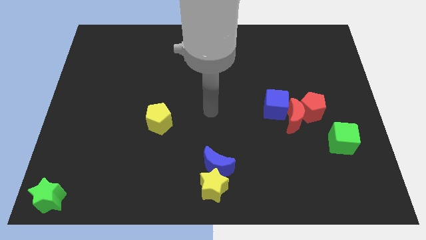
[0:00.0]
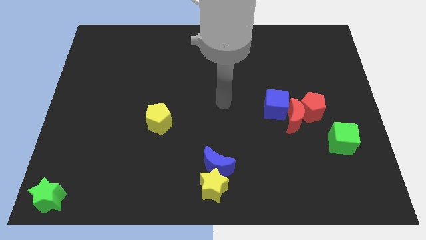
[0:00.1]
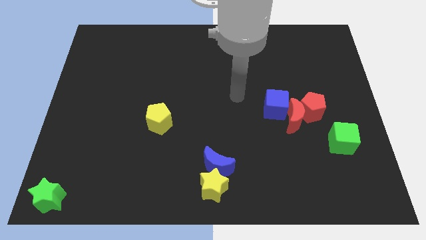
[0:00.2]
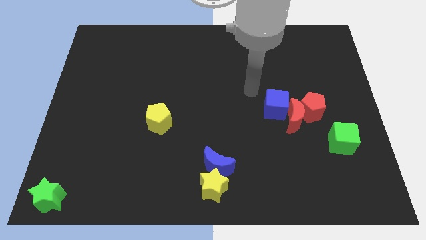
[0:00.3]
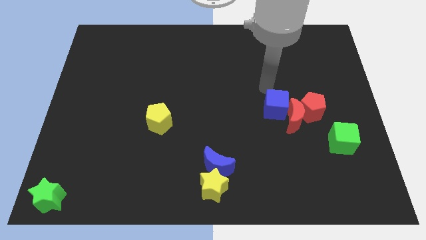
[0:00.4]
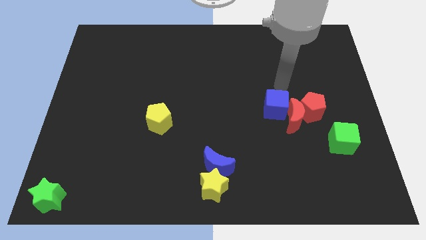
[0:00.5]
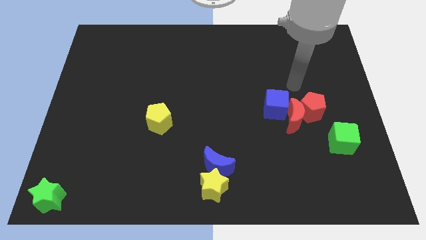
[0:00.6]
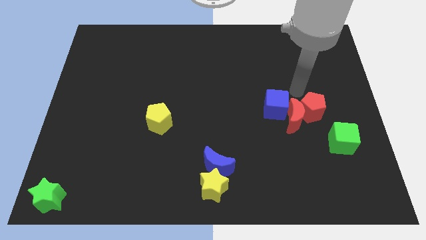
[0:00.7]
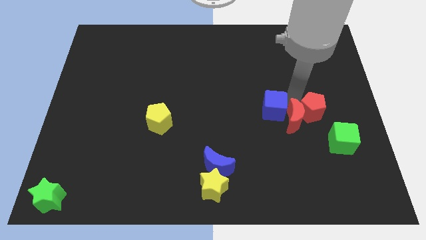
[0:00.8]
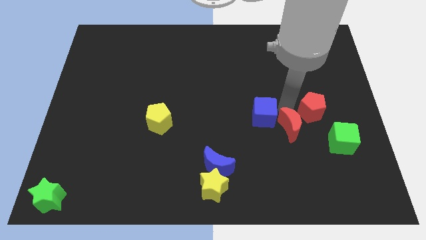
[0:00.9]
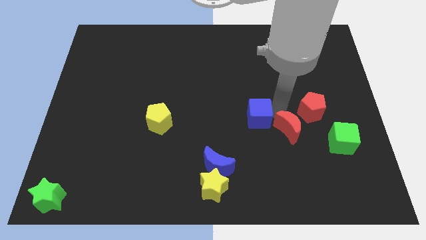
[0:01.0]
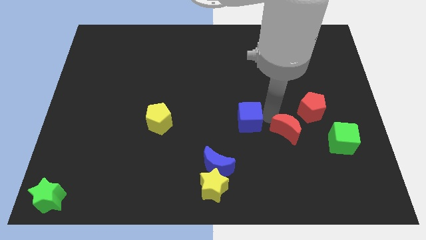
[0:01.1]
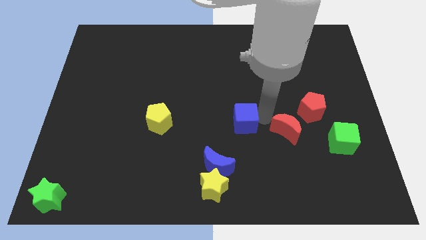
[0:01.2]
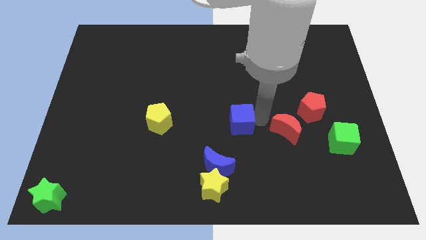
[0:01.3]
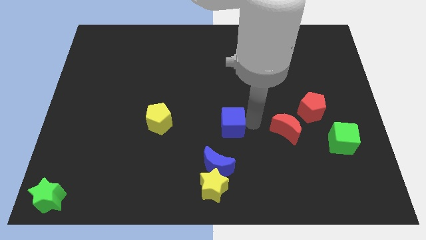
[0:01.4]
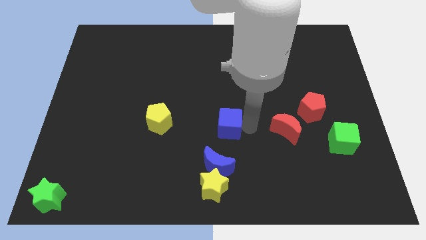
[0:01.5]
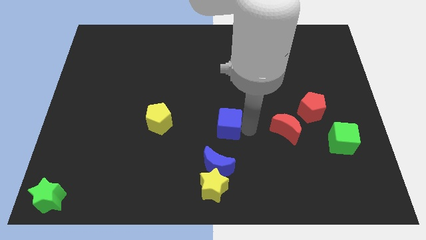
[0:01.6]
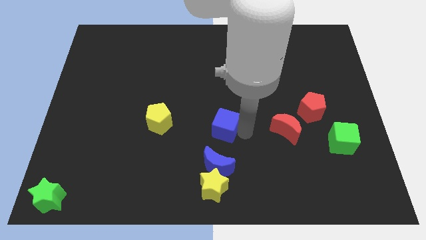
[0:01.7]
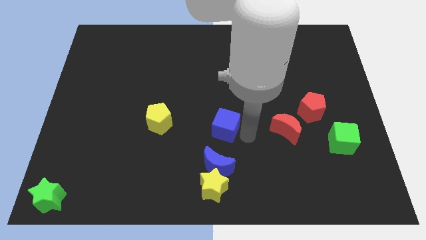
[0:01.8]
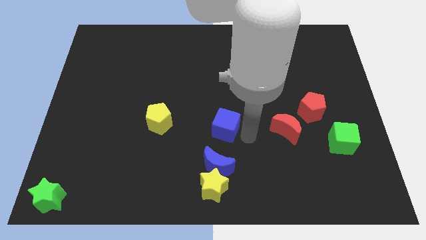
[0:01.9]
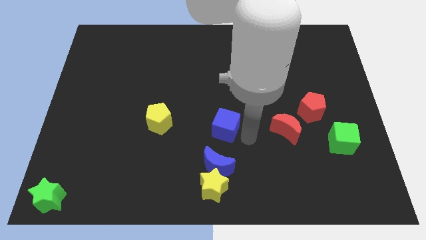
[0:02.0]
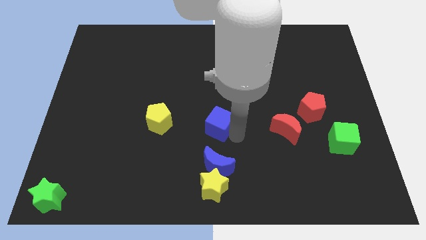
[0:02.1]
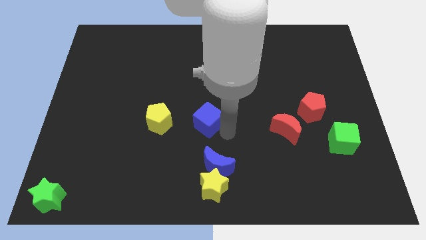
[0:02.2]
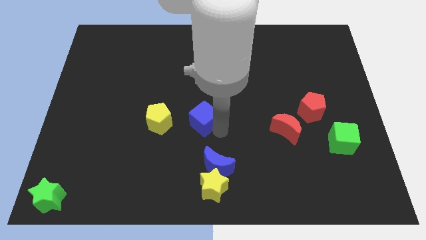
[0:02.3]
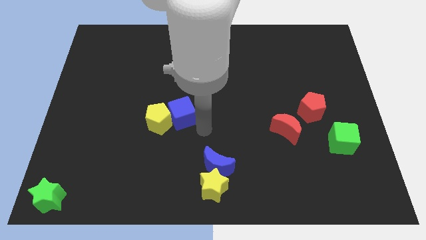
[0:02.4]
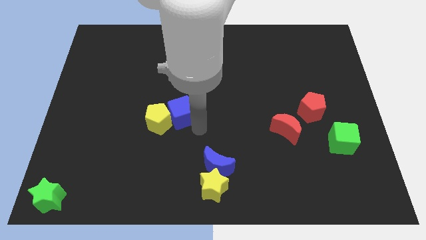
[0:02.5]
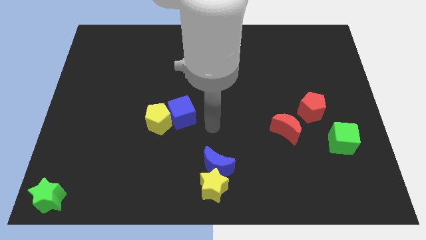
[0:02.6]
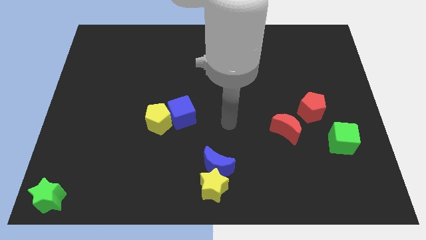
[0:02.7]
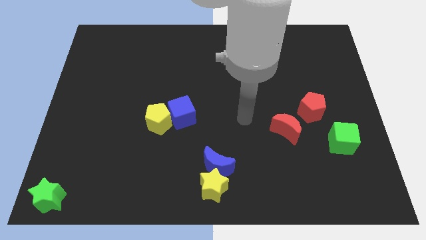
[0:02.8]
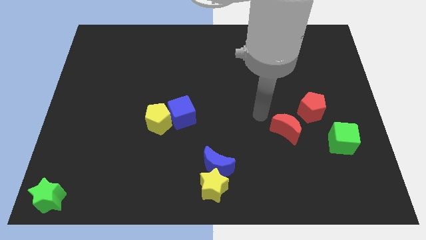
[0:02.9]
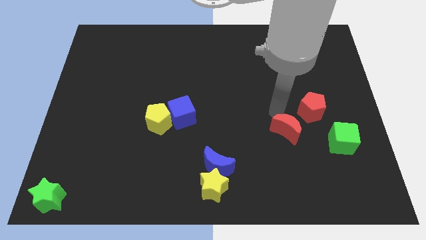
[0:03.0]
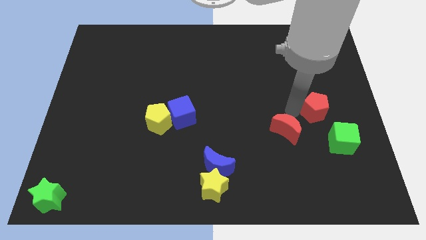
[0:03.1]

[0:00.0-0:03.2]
move the blue cube to the right side of the yellow pentagon

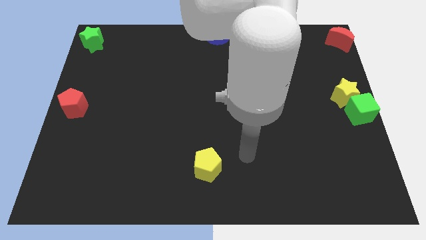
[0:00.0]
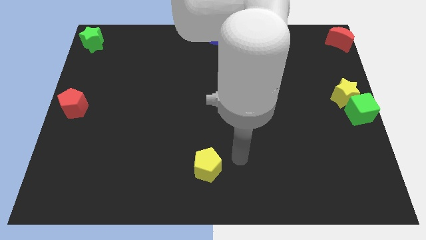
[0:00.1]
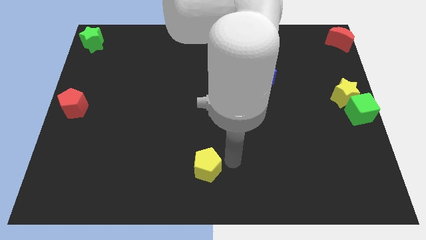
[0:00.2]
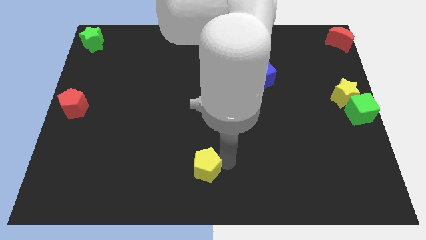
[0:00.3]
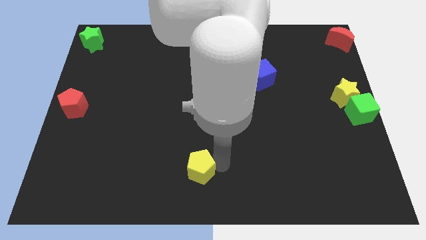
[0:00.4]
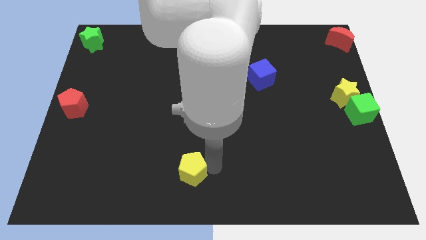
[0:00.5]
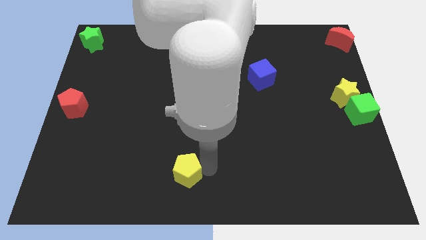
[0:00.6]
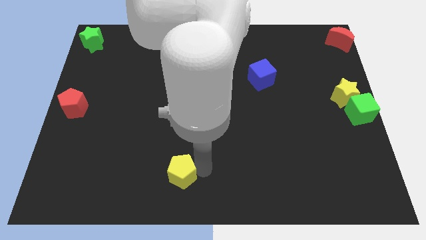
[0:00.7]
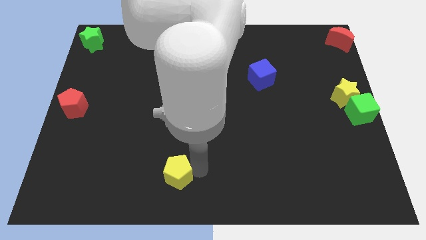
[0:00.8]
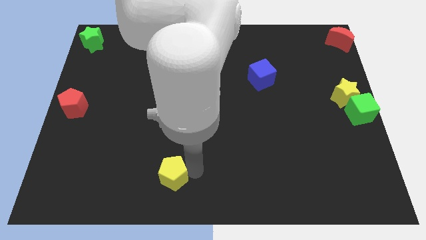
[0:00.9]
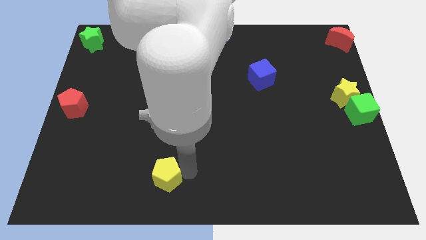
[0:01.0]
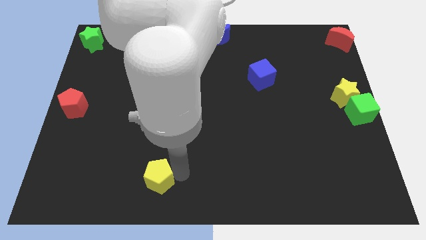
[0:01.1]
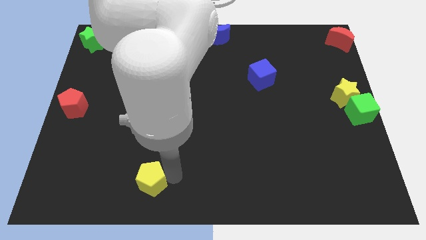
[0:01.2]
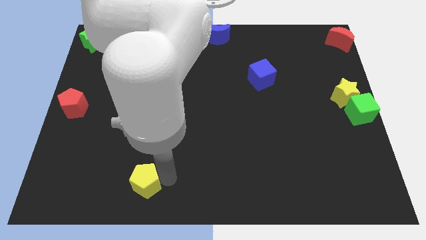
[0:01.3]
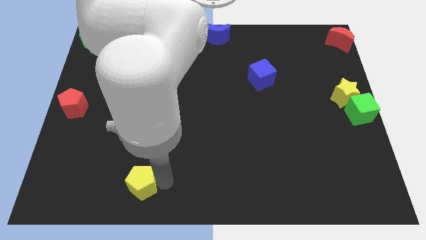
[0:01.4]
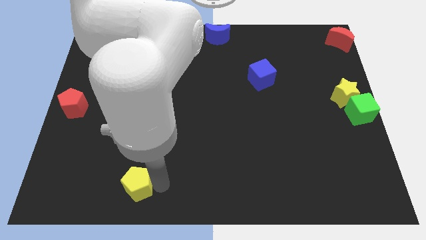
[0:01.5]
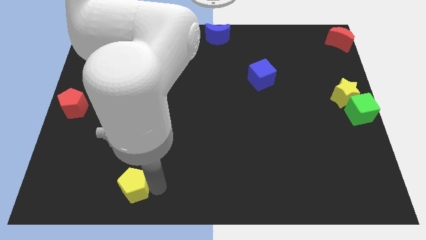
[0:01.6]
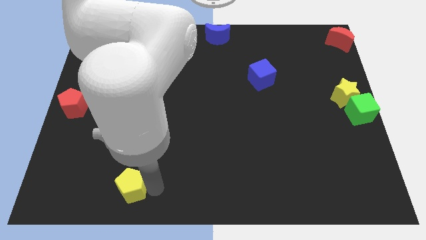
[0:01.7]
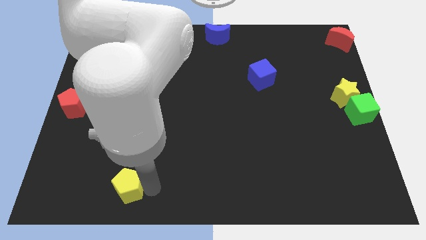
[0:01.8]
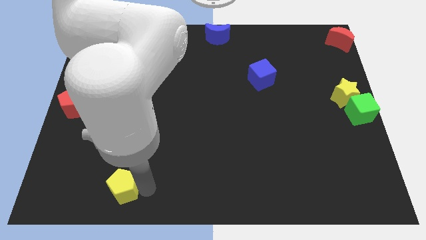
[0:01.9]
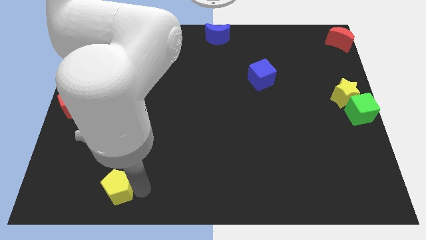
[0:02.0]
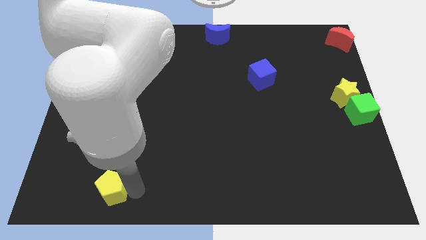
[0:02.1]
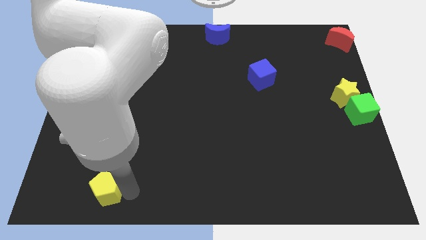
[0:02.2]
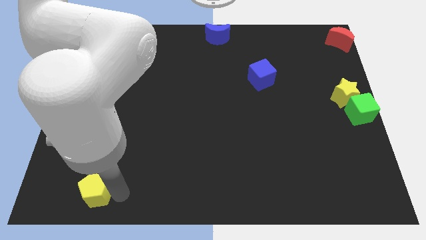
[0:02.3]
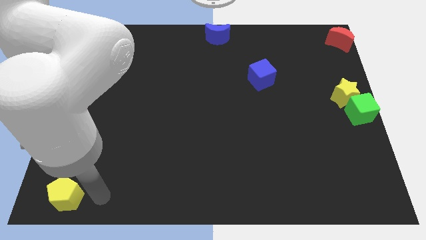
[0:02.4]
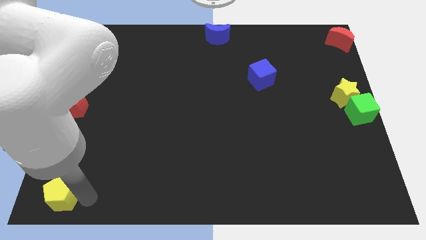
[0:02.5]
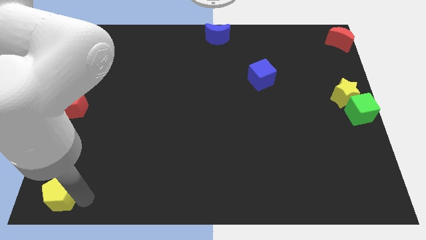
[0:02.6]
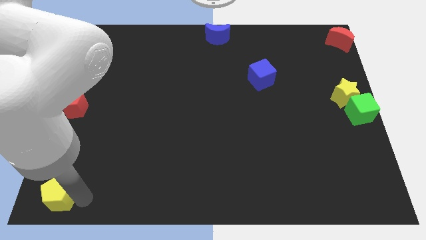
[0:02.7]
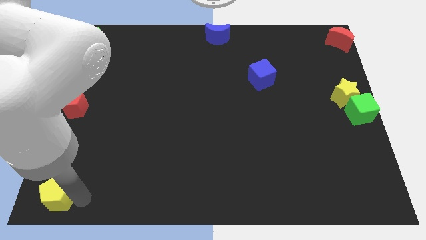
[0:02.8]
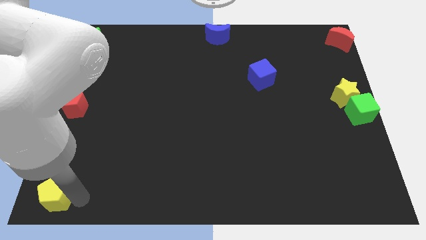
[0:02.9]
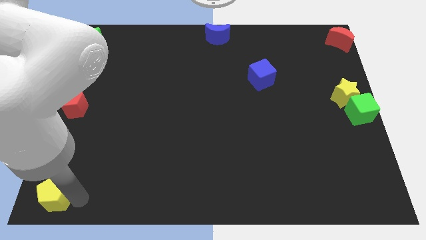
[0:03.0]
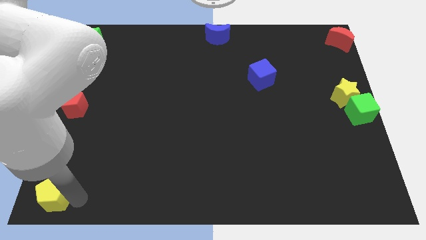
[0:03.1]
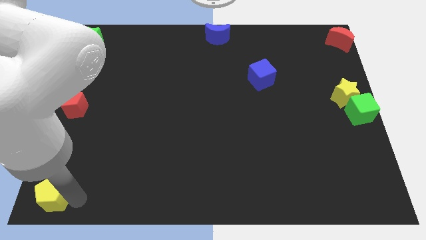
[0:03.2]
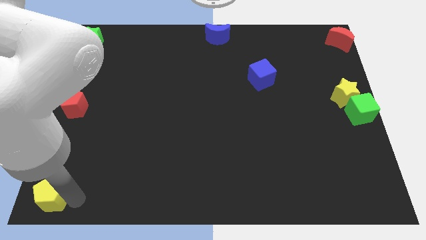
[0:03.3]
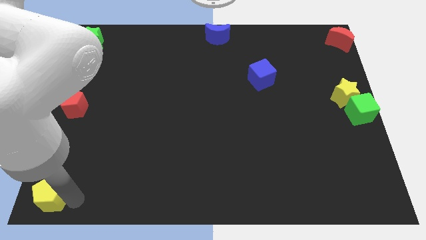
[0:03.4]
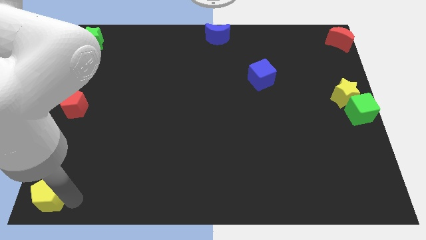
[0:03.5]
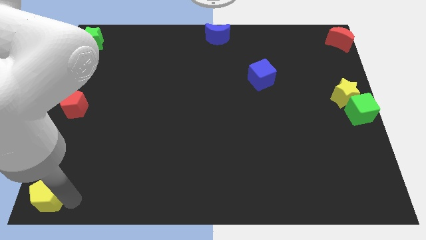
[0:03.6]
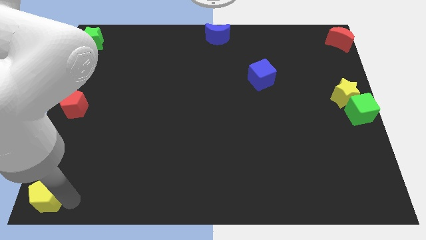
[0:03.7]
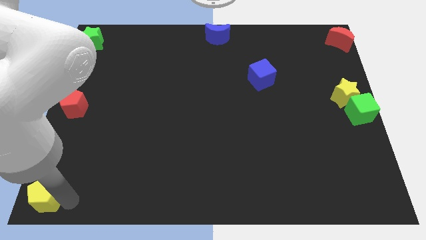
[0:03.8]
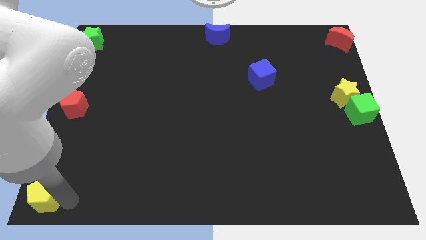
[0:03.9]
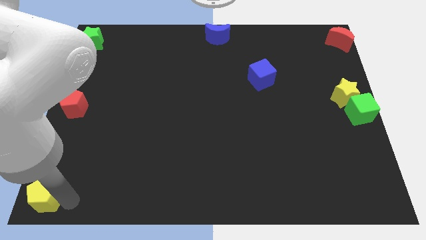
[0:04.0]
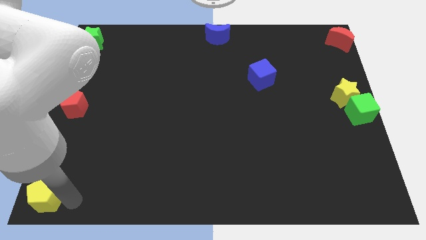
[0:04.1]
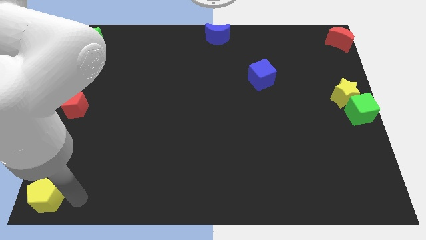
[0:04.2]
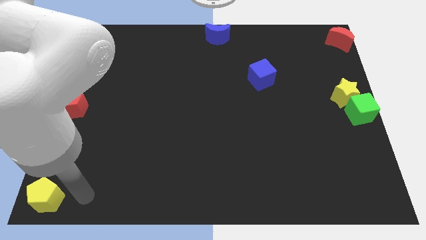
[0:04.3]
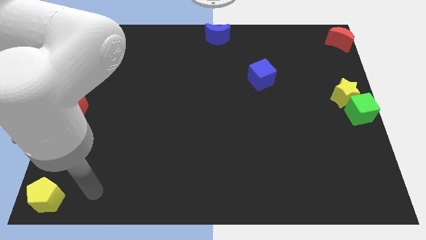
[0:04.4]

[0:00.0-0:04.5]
move the yellow pentagon to the bottom left corner of the board

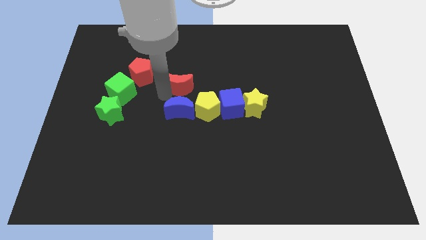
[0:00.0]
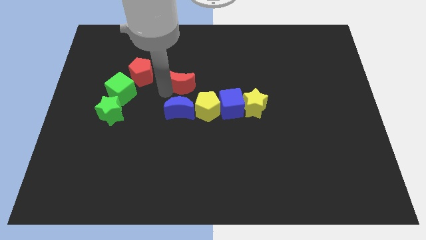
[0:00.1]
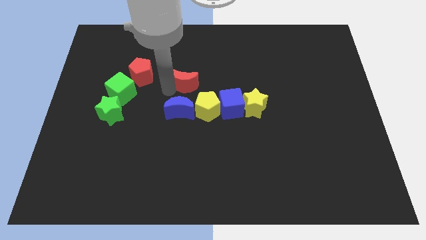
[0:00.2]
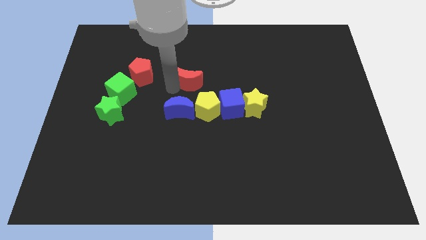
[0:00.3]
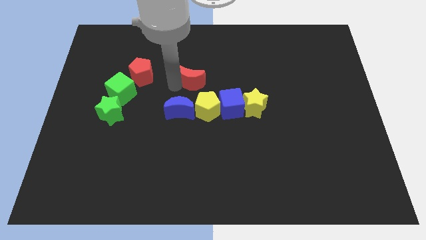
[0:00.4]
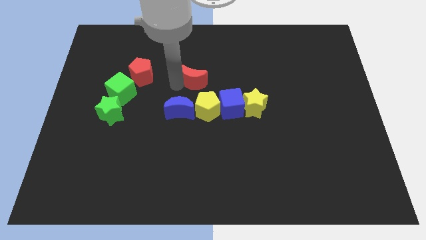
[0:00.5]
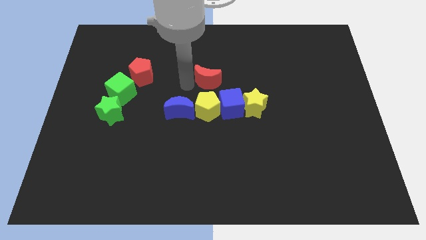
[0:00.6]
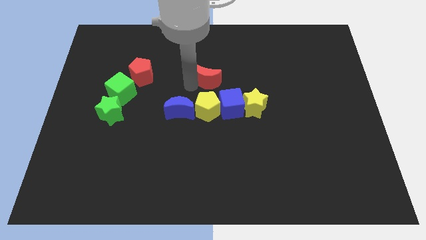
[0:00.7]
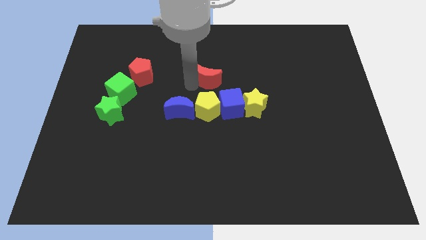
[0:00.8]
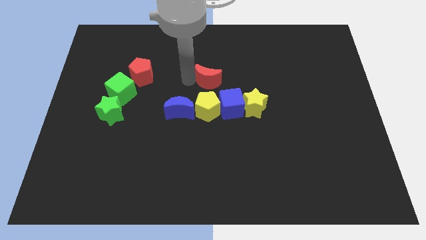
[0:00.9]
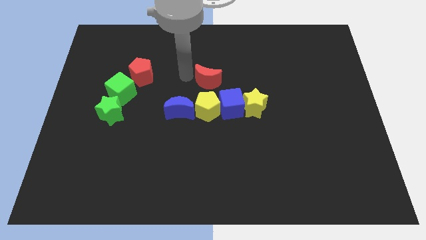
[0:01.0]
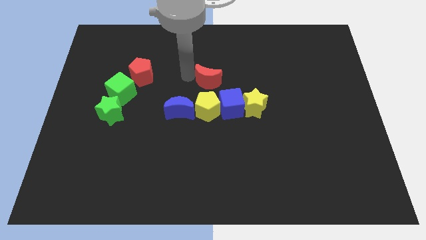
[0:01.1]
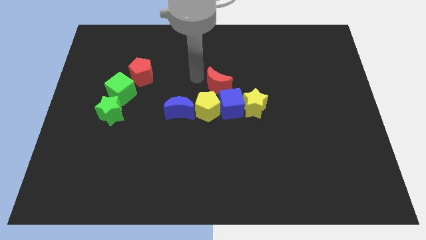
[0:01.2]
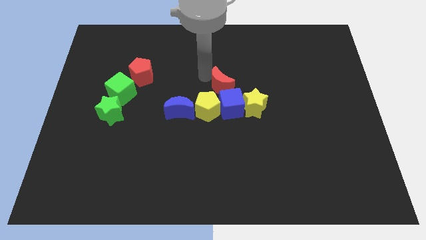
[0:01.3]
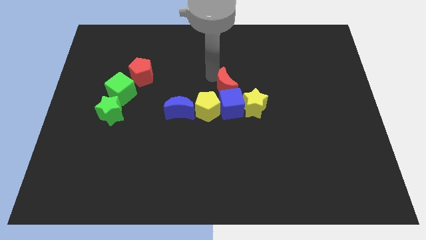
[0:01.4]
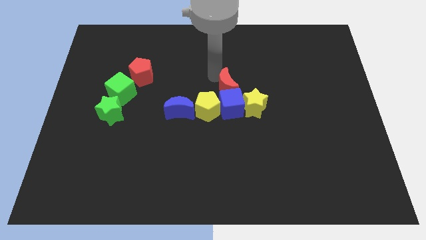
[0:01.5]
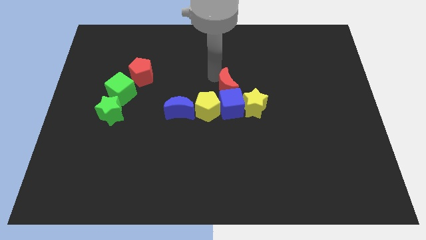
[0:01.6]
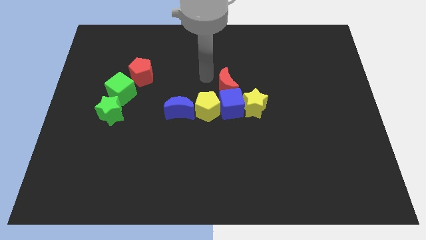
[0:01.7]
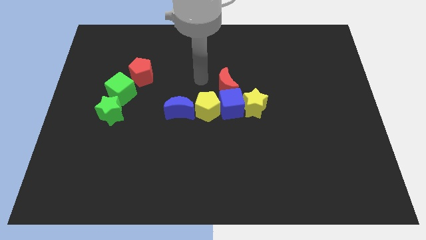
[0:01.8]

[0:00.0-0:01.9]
place the red crescent to the top of blue cube
